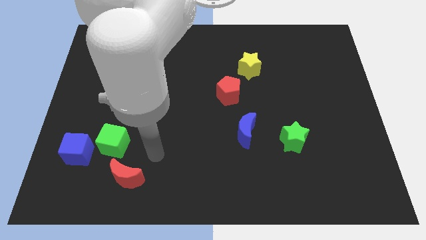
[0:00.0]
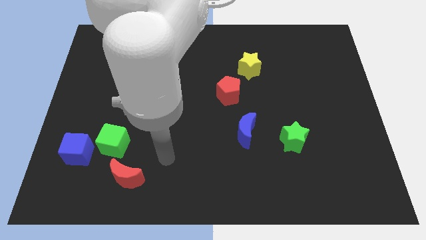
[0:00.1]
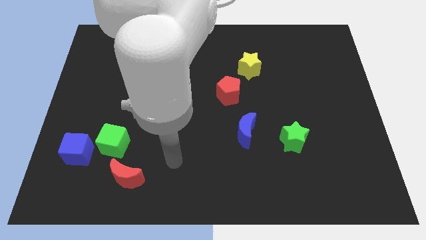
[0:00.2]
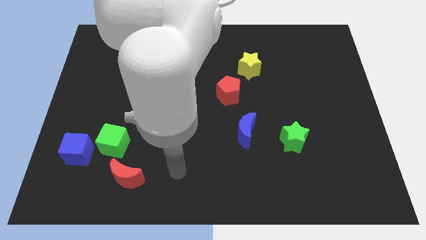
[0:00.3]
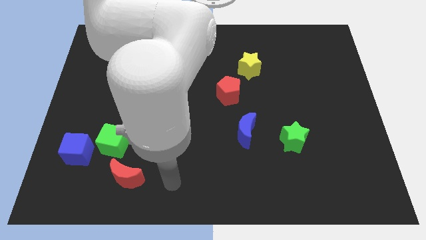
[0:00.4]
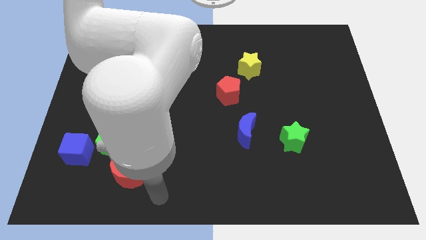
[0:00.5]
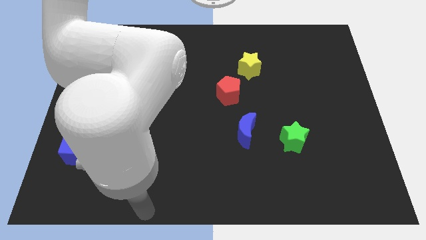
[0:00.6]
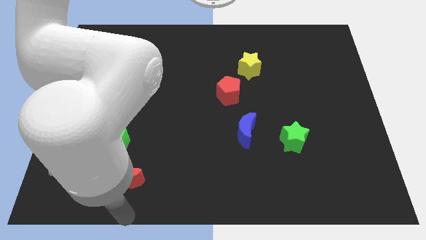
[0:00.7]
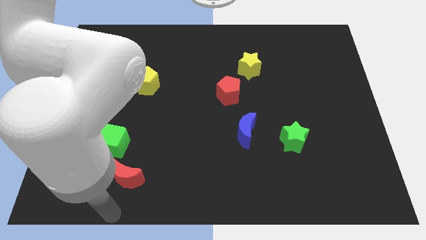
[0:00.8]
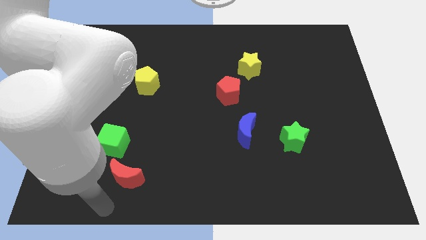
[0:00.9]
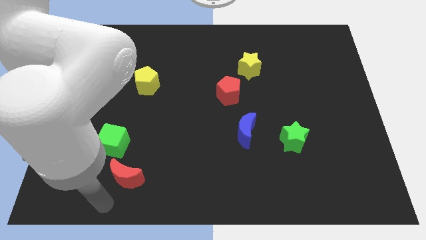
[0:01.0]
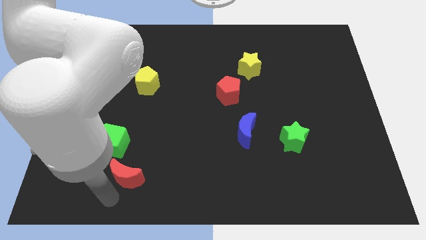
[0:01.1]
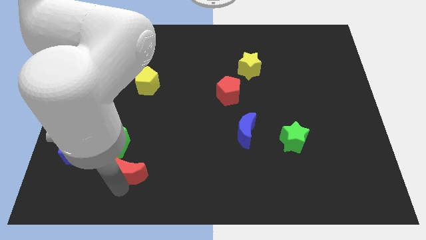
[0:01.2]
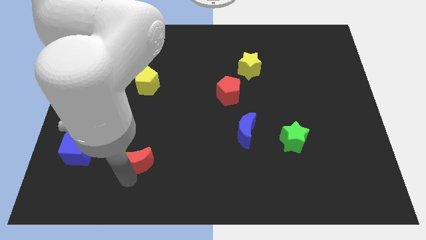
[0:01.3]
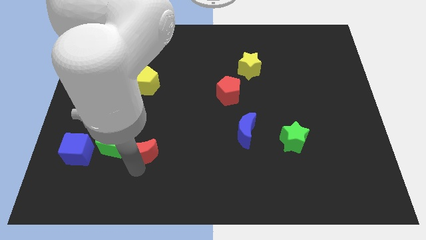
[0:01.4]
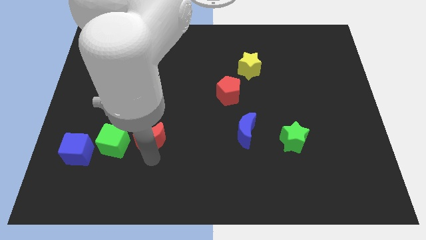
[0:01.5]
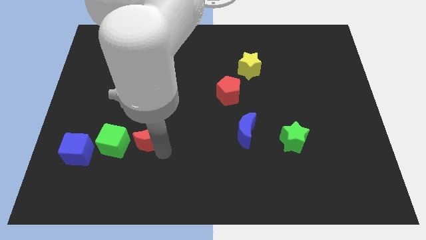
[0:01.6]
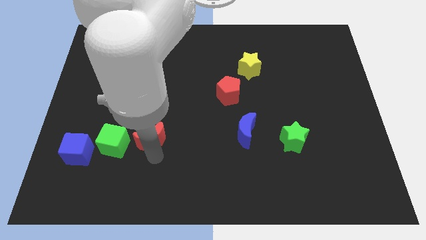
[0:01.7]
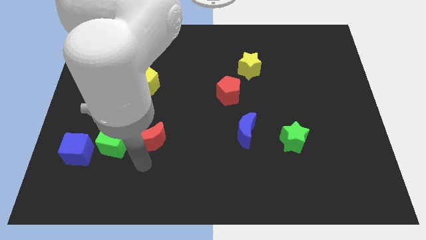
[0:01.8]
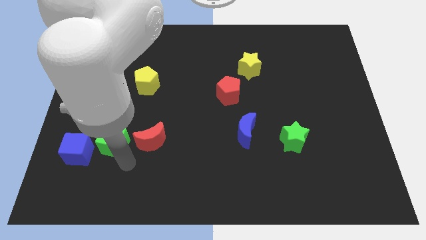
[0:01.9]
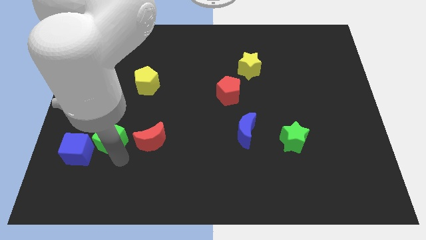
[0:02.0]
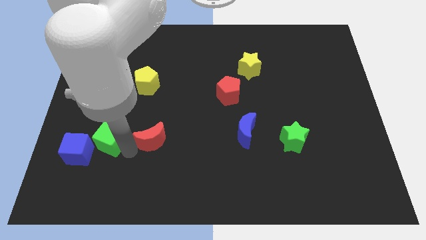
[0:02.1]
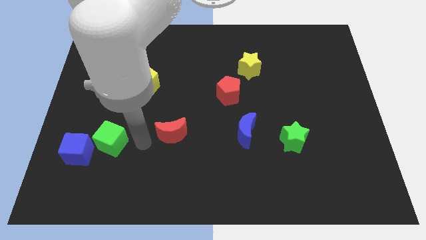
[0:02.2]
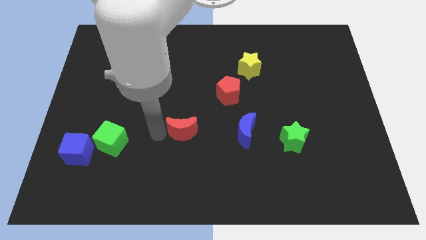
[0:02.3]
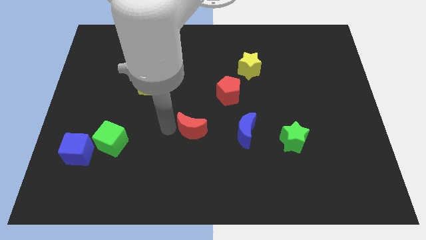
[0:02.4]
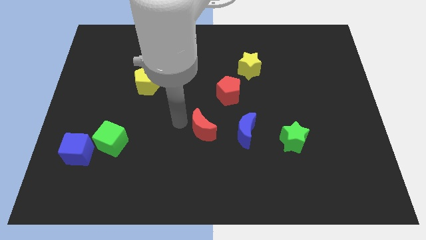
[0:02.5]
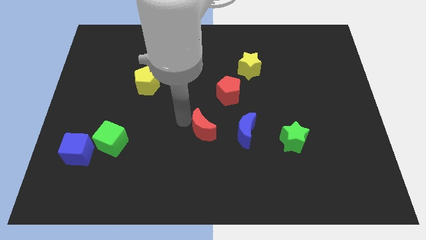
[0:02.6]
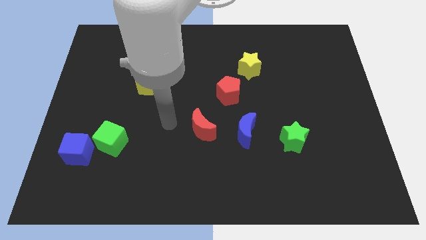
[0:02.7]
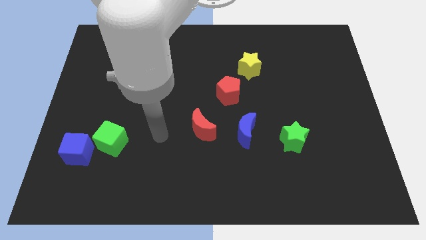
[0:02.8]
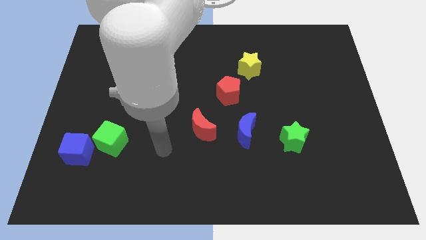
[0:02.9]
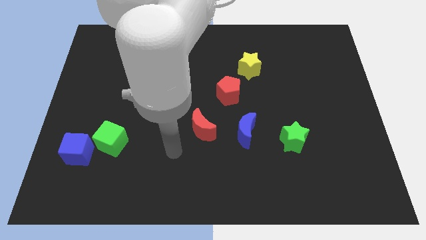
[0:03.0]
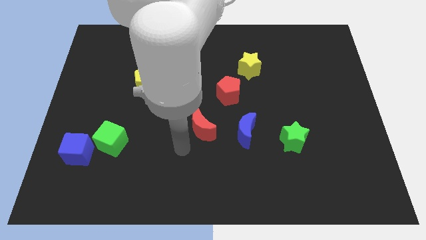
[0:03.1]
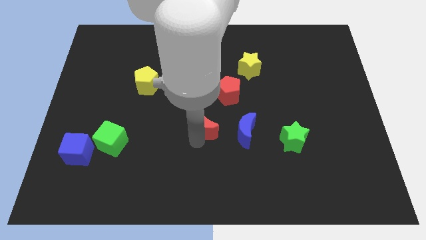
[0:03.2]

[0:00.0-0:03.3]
push the red crescent to the left of the blue crescent

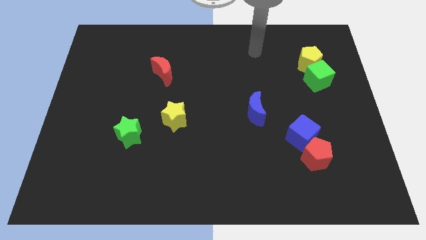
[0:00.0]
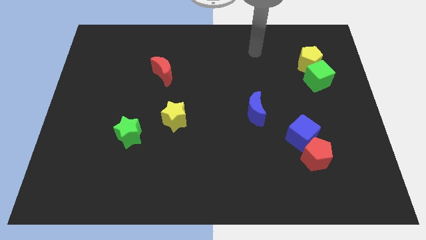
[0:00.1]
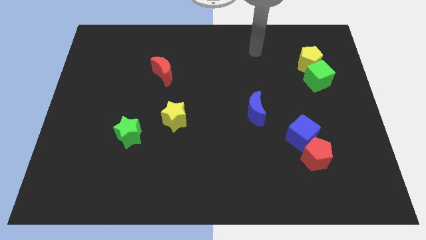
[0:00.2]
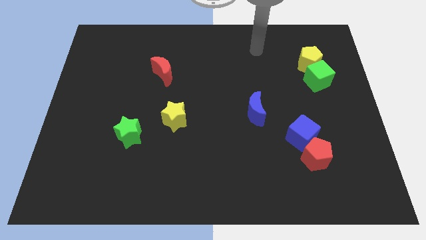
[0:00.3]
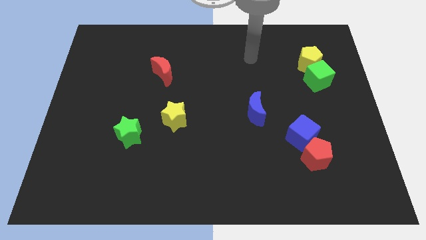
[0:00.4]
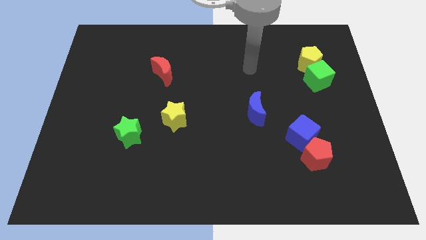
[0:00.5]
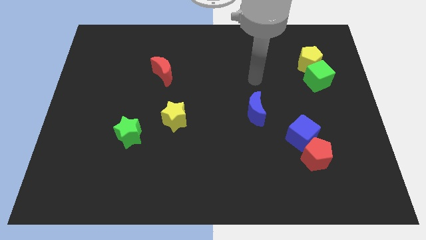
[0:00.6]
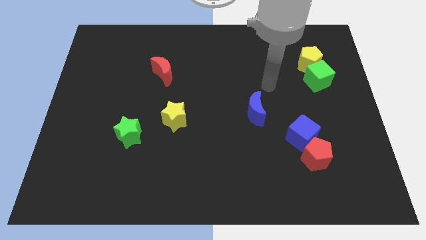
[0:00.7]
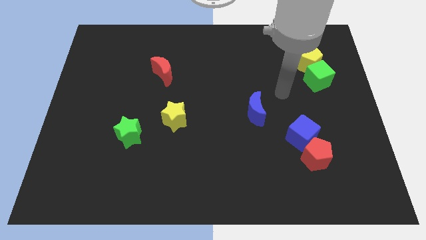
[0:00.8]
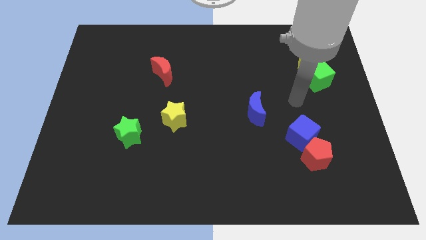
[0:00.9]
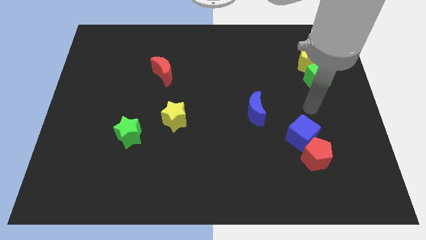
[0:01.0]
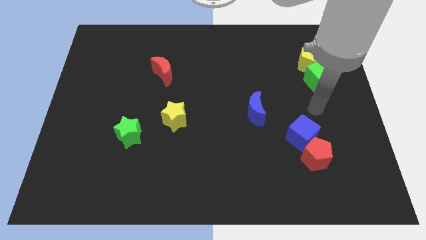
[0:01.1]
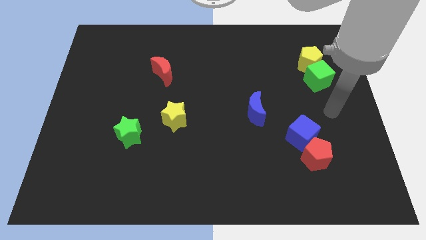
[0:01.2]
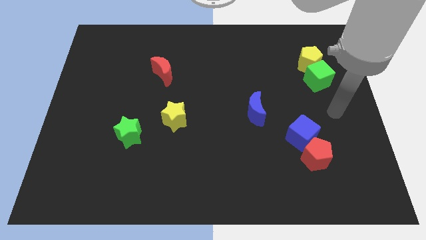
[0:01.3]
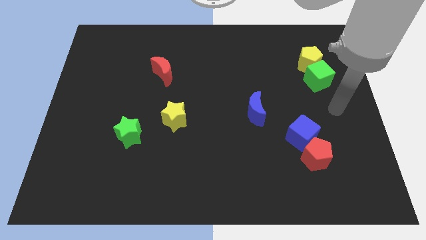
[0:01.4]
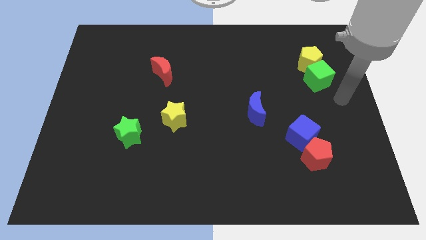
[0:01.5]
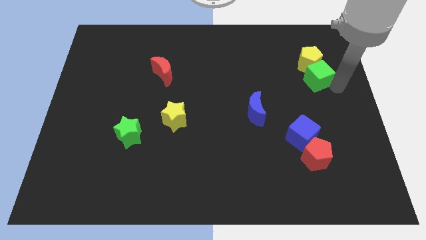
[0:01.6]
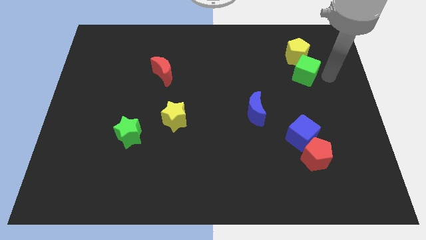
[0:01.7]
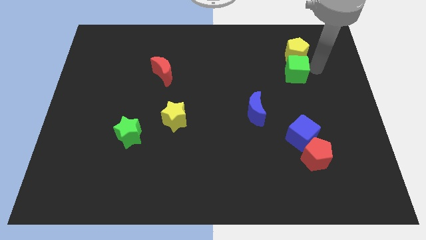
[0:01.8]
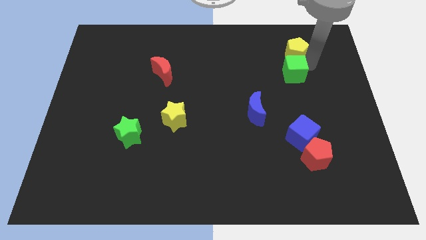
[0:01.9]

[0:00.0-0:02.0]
push the green cube into the yellow pentagon

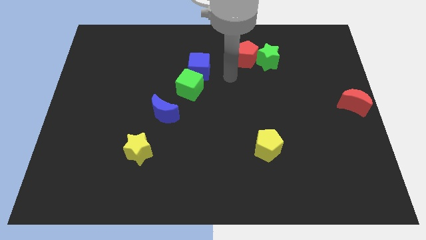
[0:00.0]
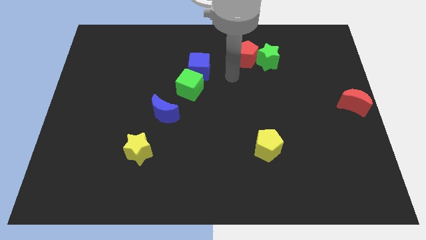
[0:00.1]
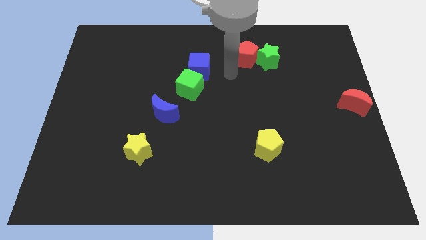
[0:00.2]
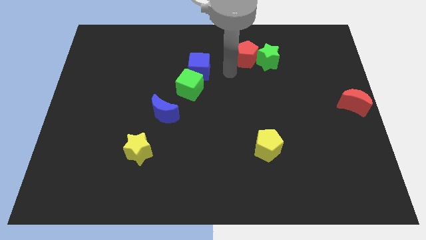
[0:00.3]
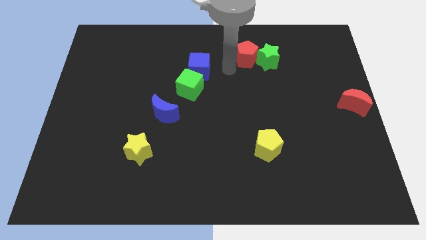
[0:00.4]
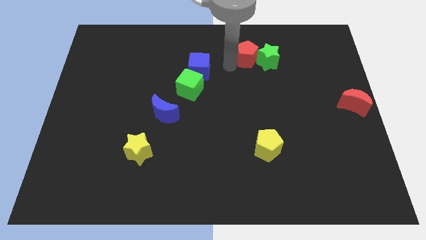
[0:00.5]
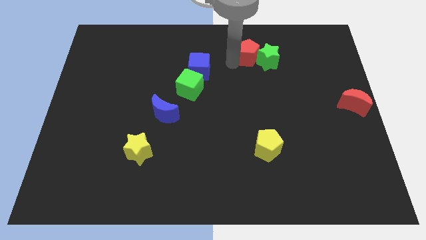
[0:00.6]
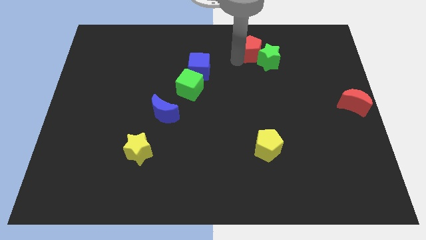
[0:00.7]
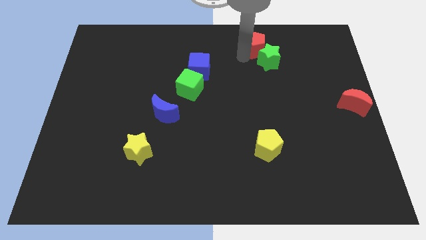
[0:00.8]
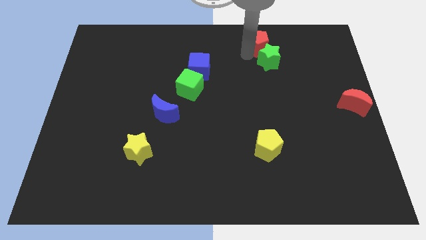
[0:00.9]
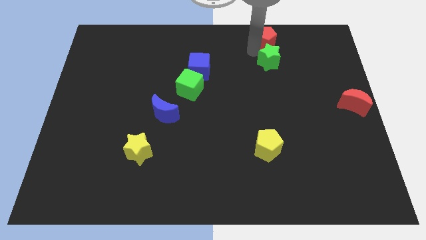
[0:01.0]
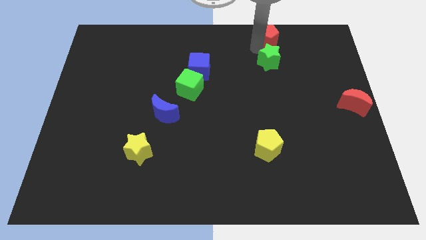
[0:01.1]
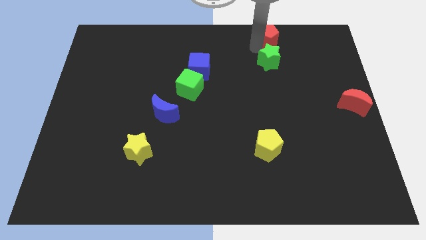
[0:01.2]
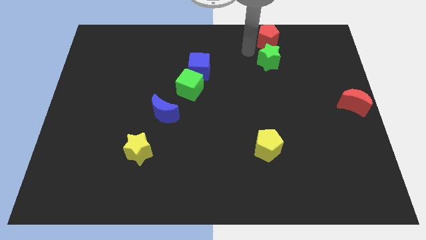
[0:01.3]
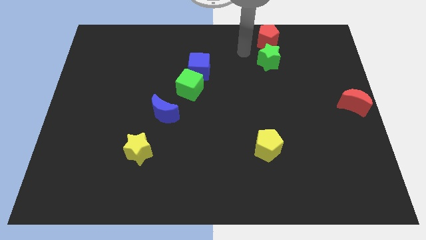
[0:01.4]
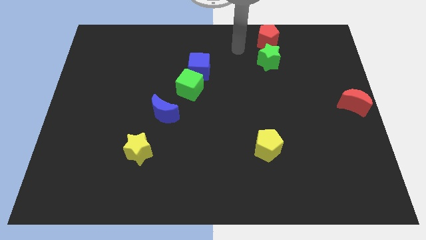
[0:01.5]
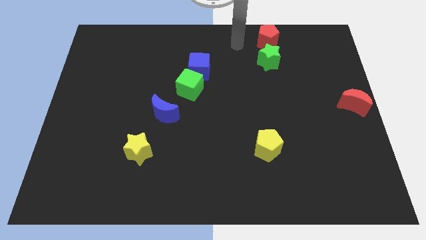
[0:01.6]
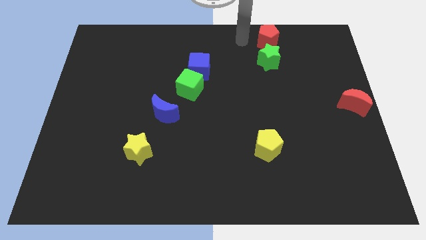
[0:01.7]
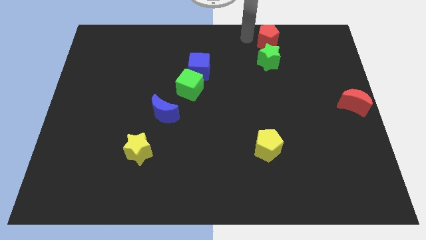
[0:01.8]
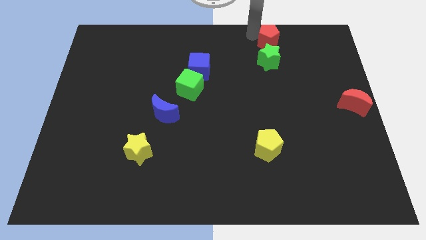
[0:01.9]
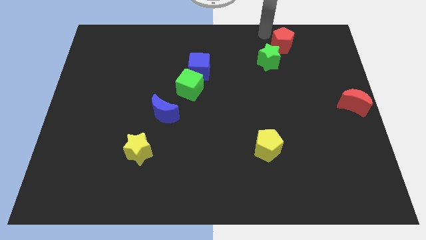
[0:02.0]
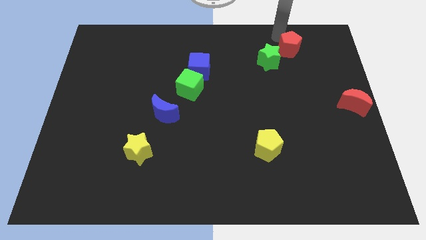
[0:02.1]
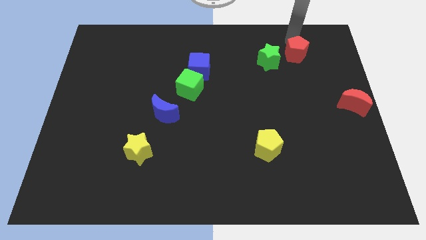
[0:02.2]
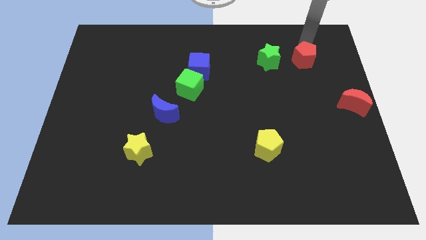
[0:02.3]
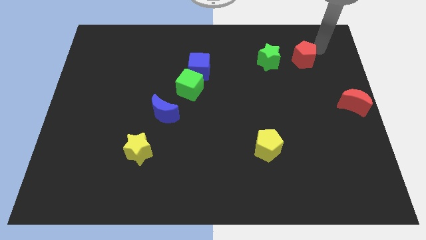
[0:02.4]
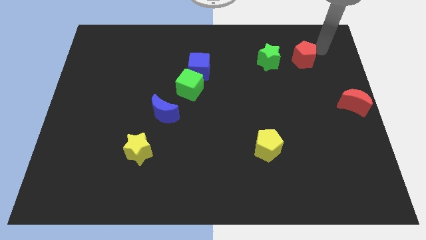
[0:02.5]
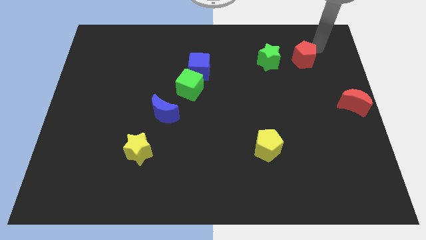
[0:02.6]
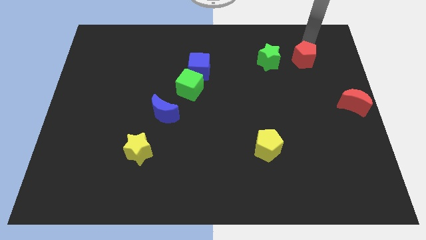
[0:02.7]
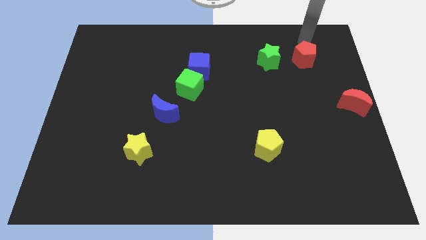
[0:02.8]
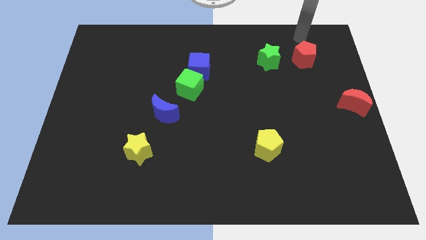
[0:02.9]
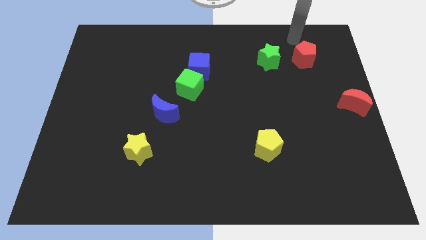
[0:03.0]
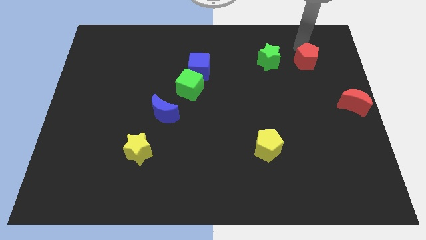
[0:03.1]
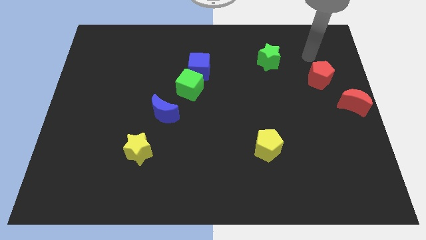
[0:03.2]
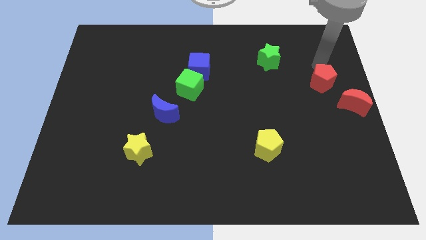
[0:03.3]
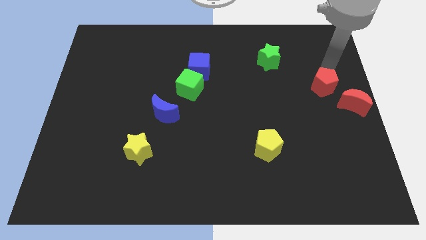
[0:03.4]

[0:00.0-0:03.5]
move red pentagon towards red moon

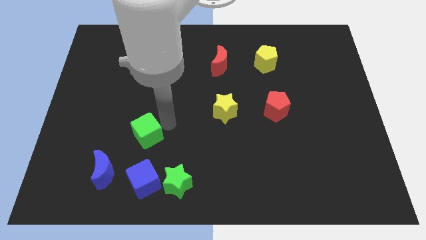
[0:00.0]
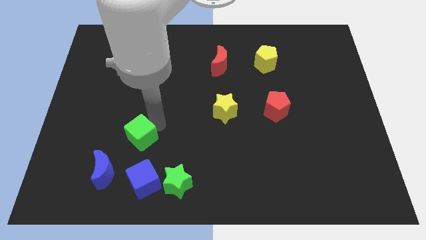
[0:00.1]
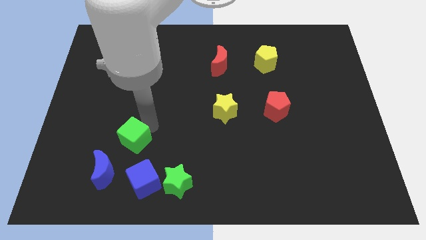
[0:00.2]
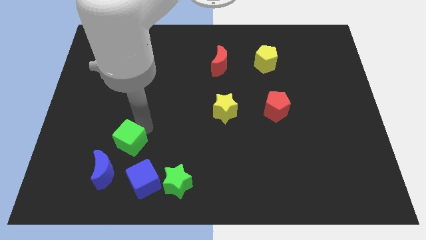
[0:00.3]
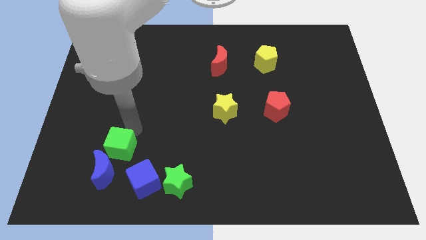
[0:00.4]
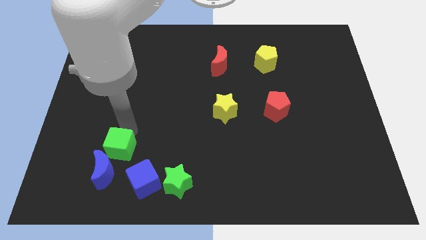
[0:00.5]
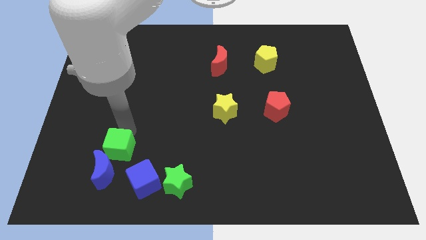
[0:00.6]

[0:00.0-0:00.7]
place the green cube above the blue moon
